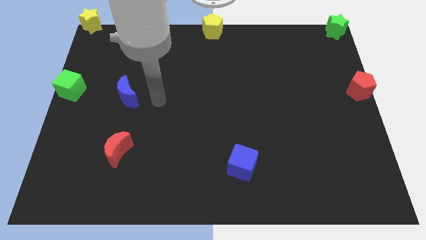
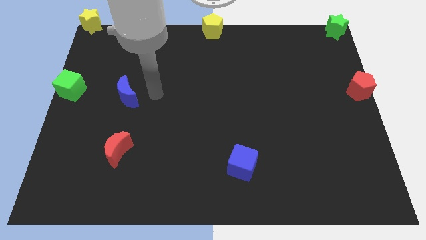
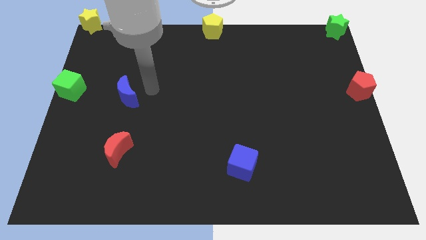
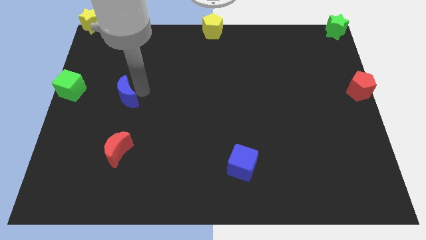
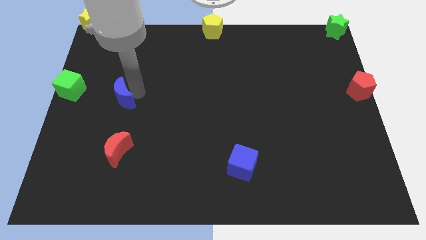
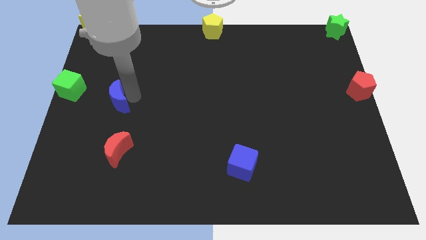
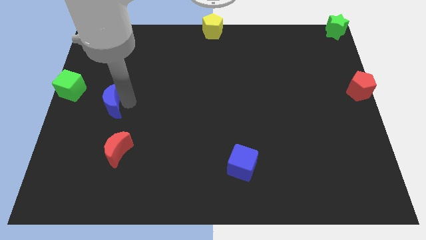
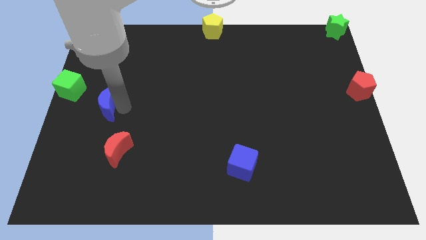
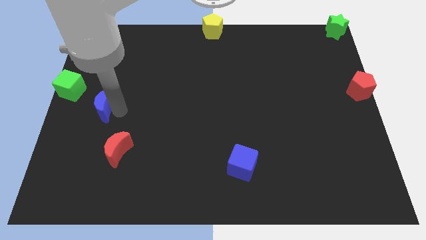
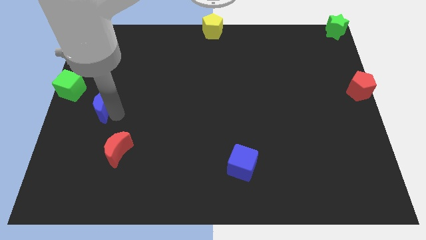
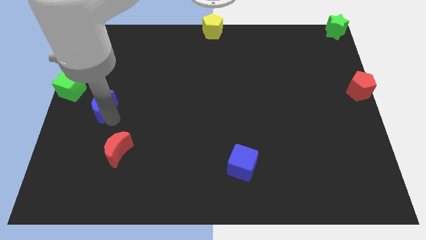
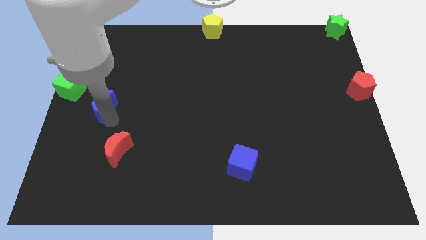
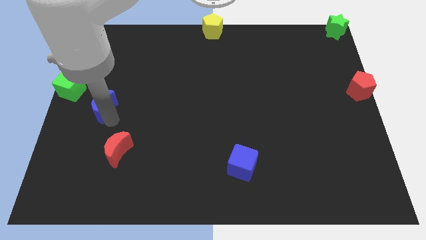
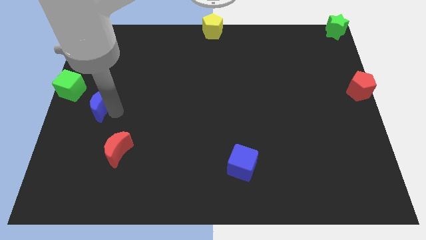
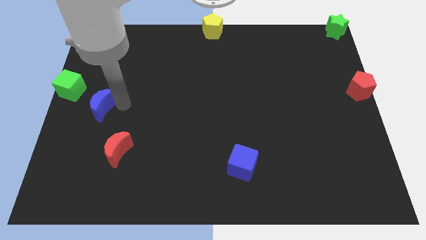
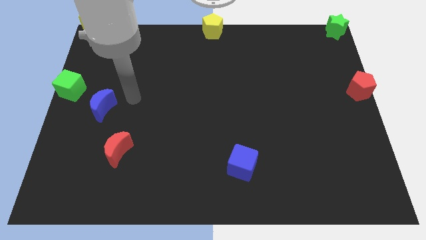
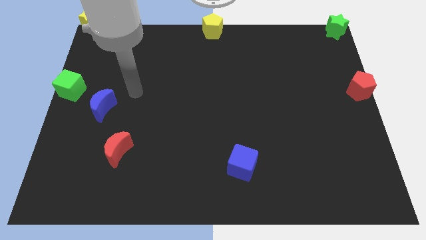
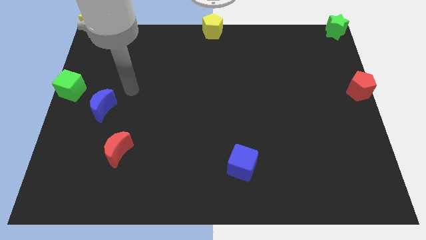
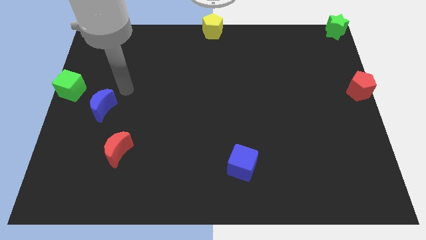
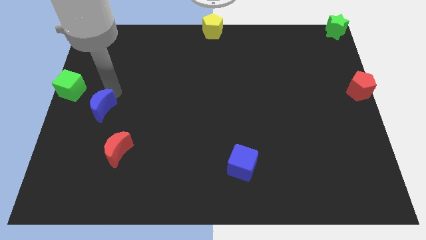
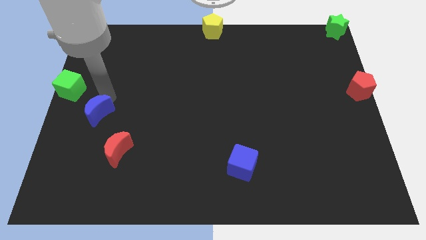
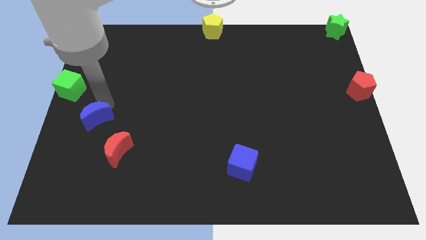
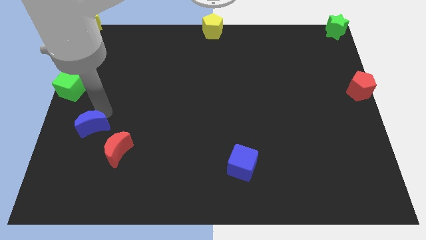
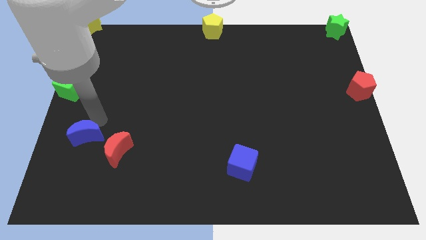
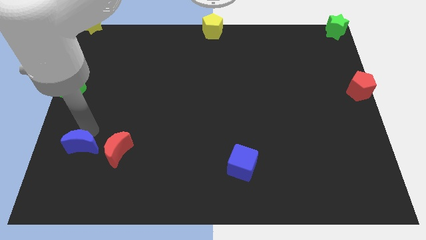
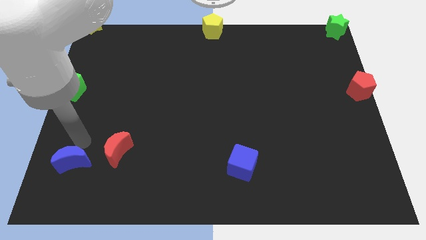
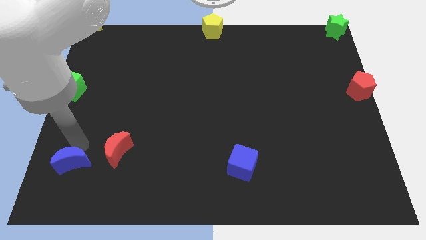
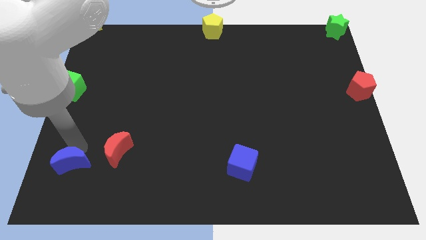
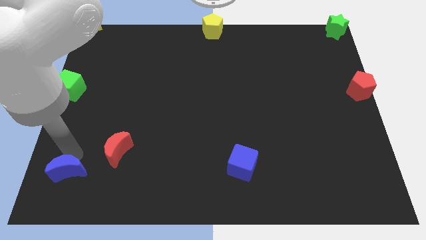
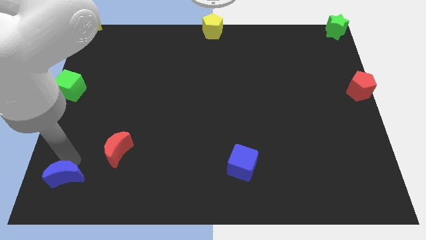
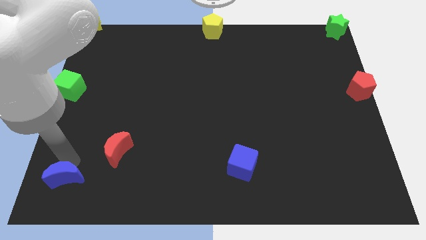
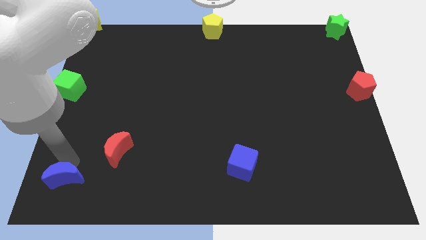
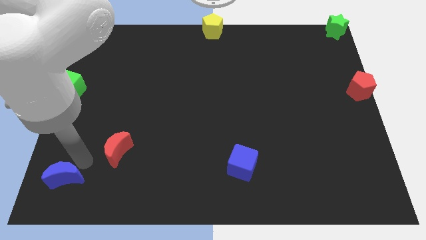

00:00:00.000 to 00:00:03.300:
move the blue moon to the bottom left of the board

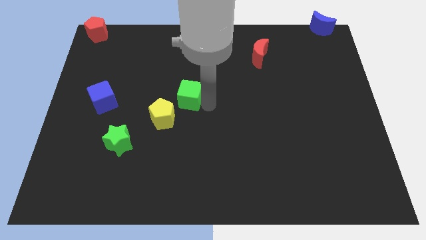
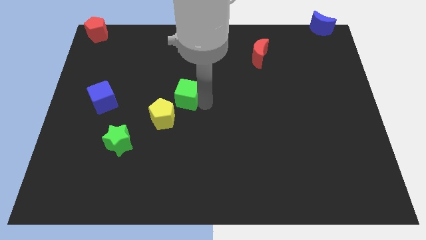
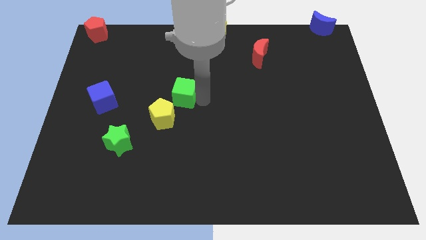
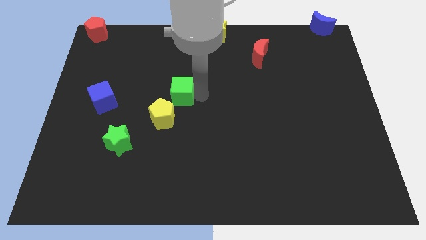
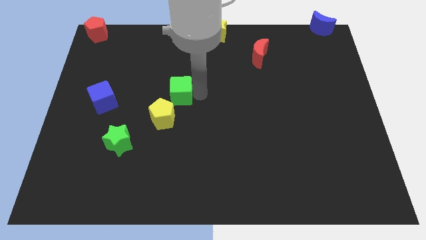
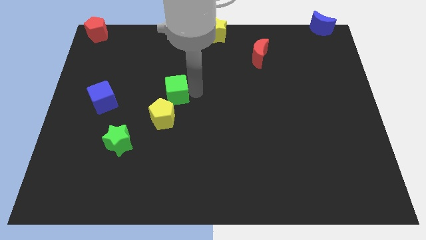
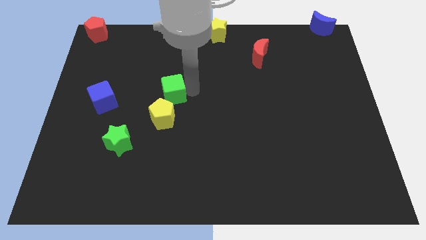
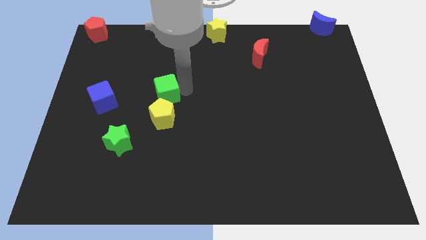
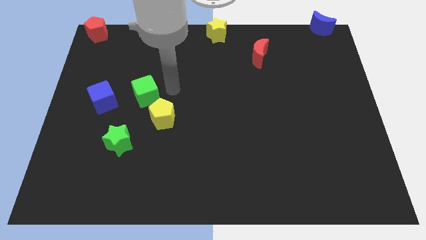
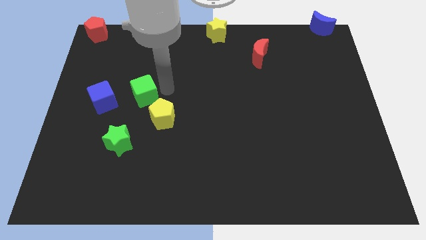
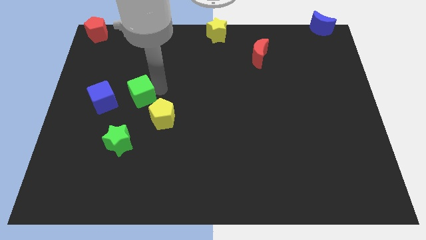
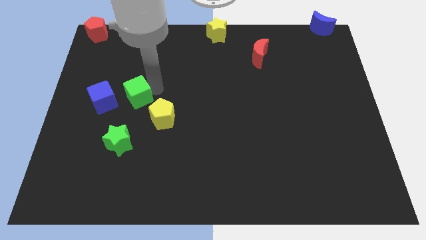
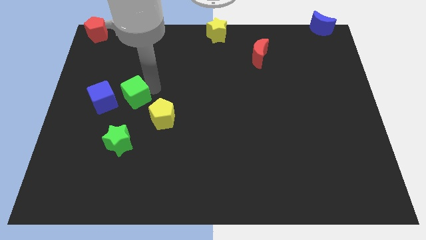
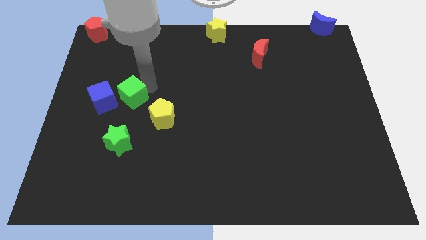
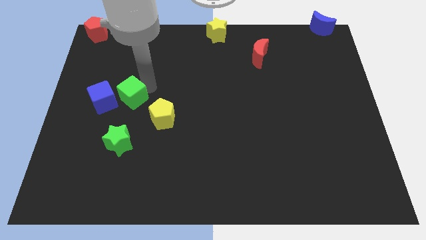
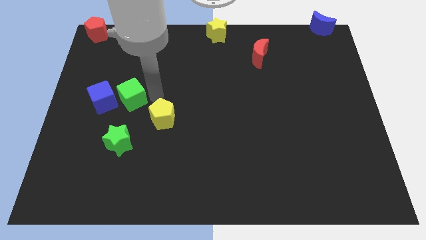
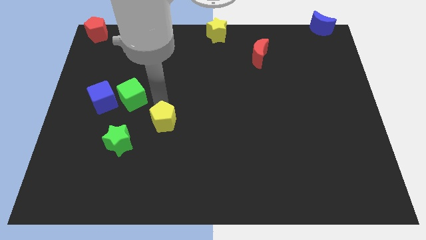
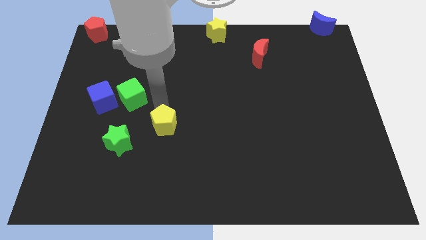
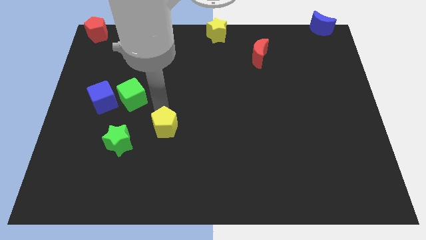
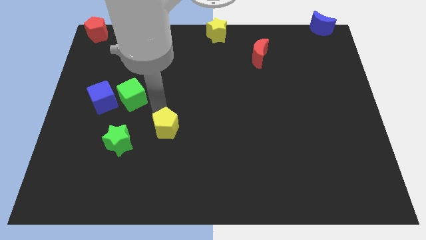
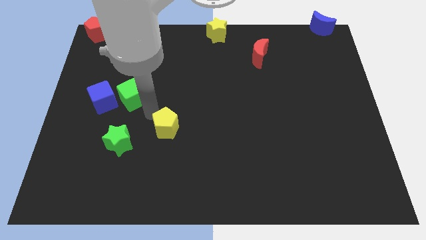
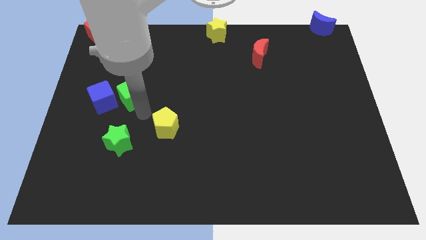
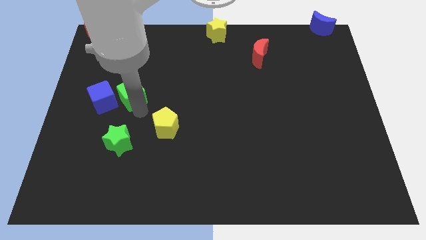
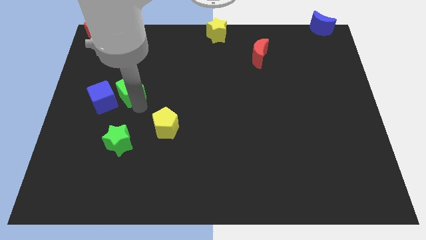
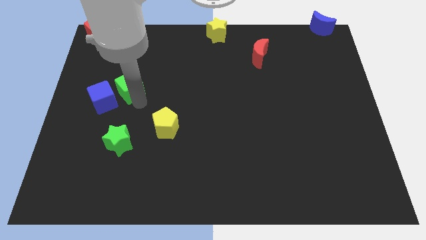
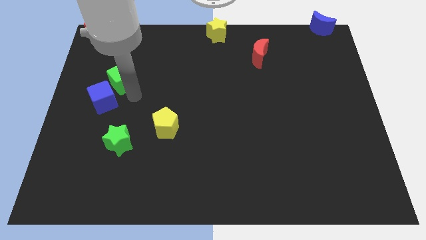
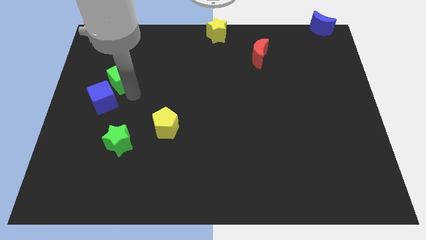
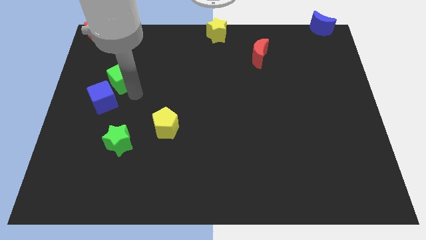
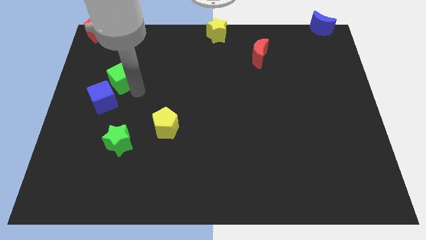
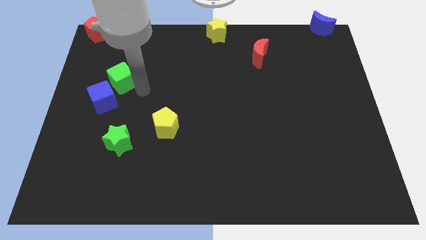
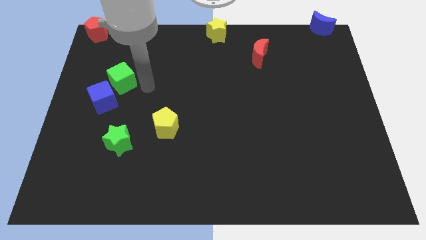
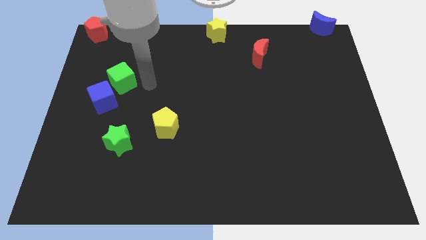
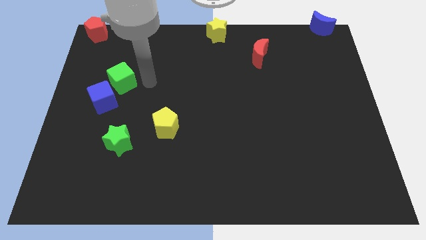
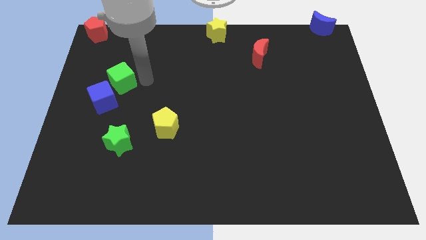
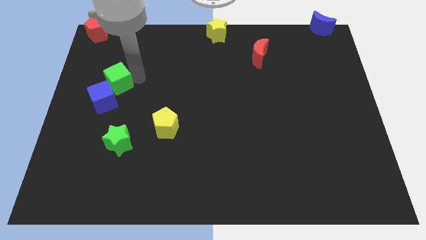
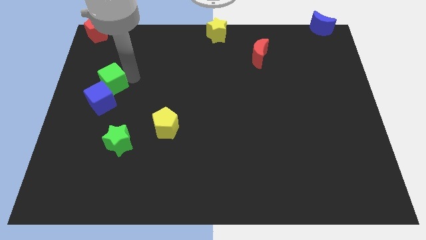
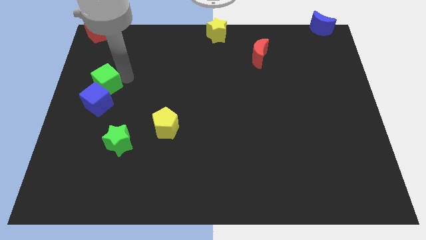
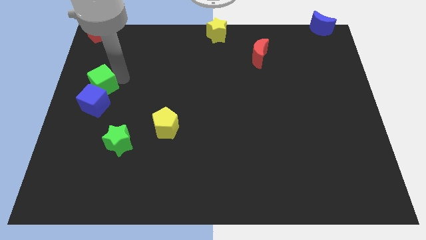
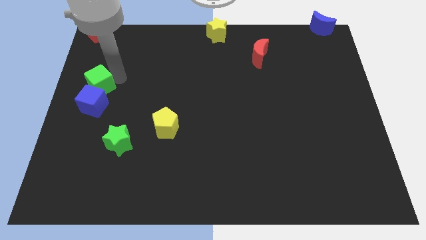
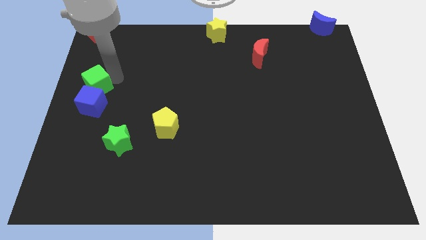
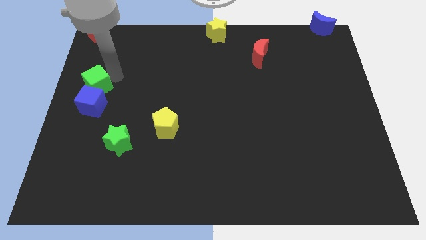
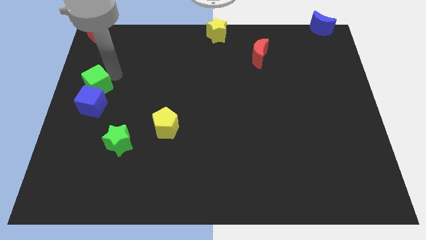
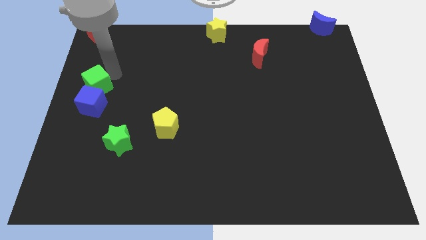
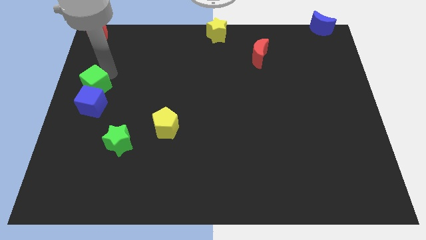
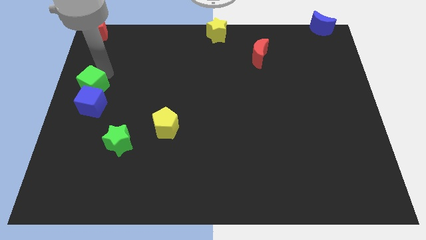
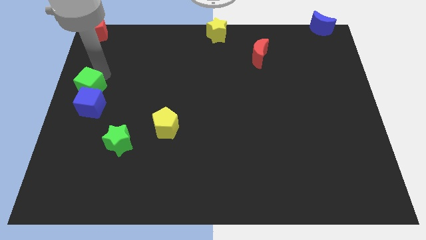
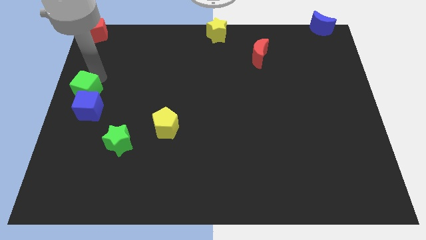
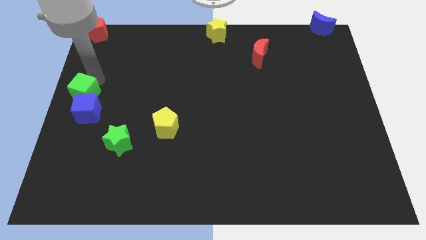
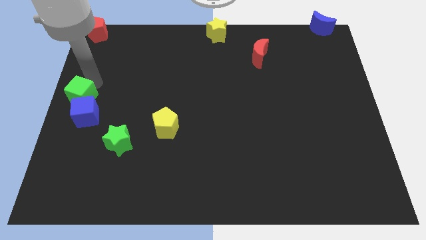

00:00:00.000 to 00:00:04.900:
push the green cube into the blue cube

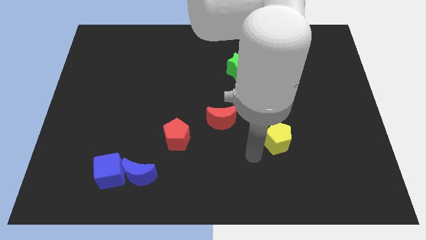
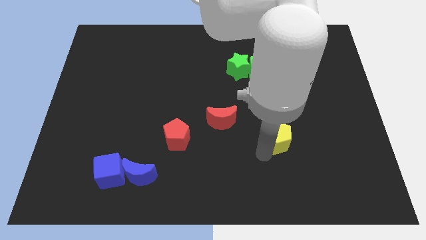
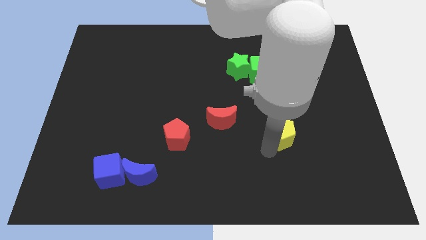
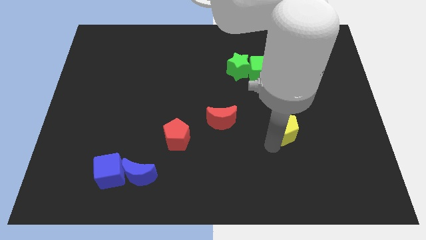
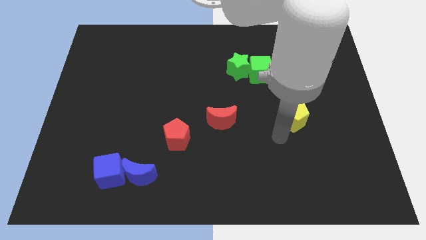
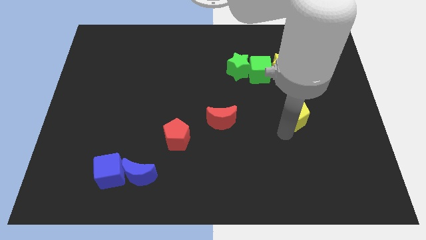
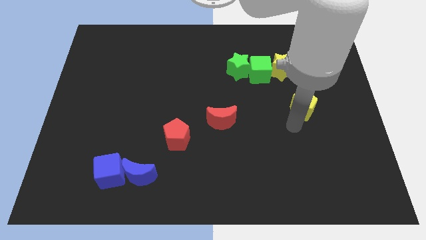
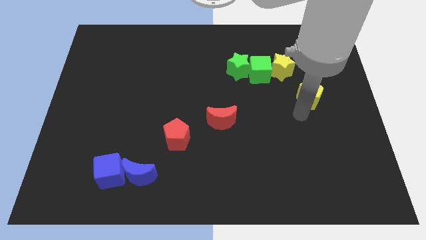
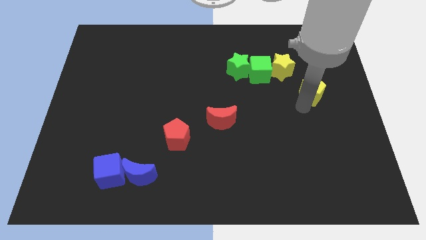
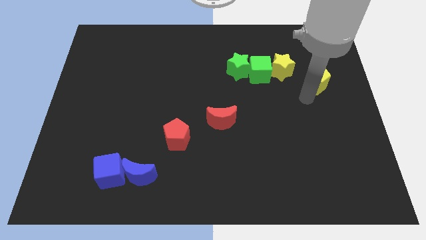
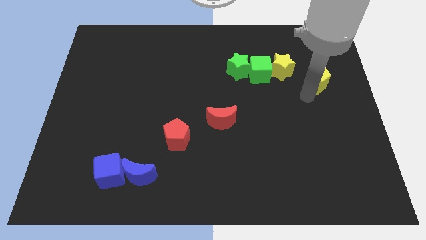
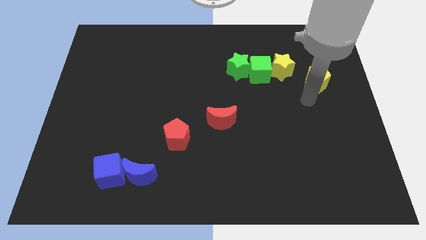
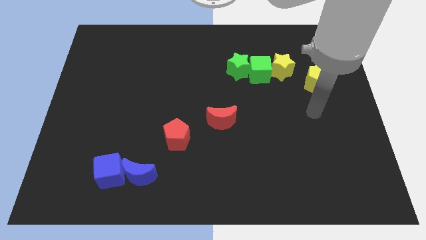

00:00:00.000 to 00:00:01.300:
push pentagon diagonally upwards
